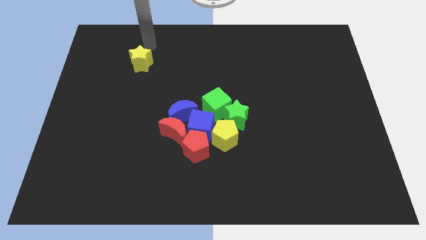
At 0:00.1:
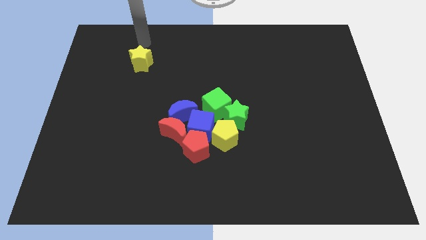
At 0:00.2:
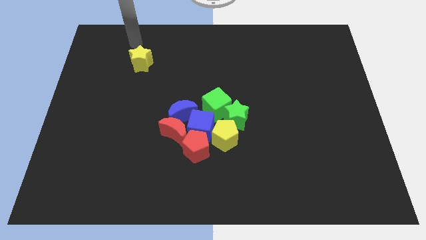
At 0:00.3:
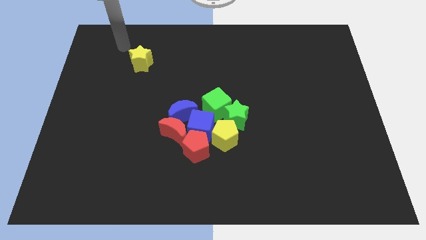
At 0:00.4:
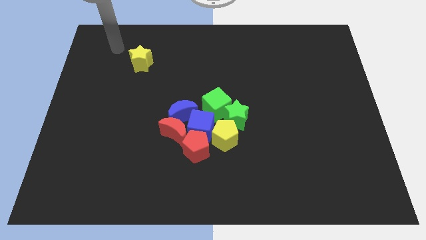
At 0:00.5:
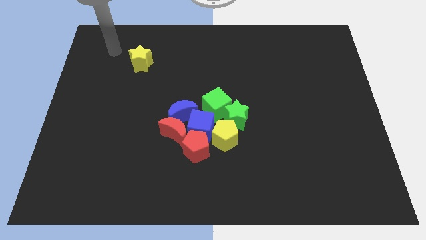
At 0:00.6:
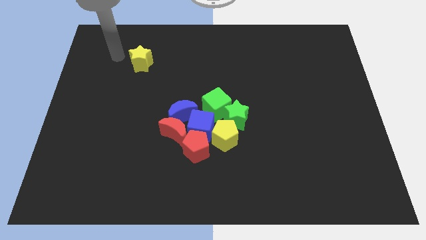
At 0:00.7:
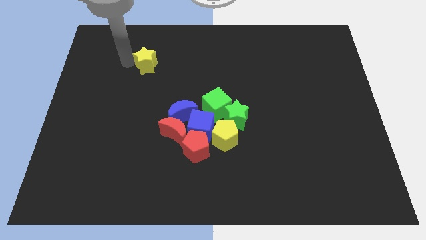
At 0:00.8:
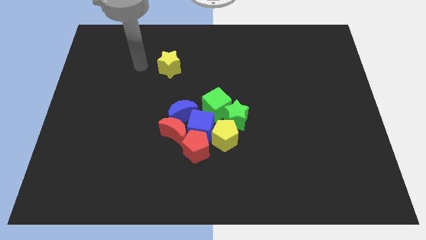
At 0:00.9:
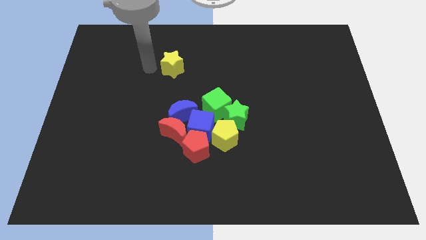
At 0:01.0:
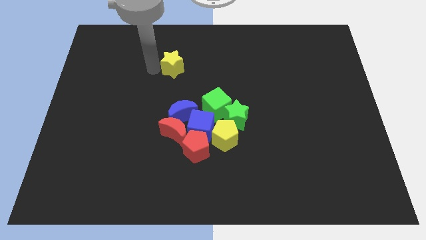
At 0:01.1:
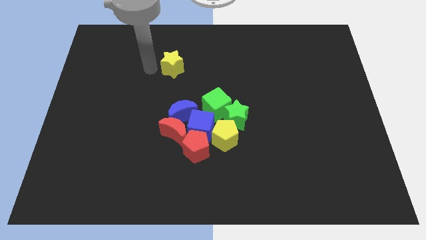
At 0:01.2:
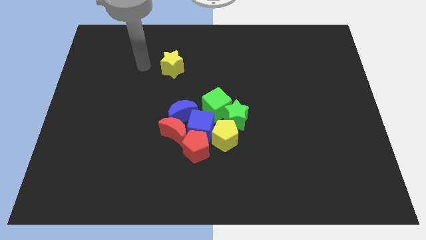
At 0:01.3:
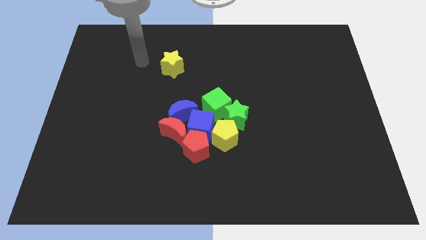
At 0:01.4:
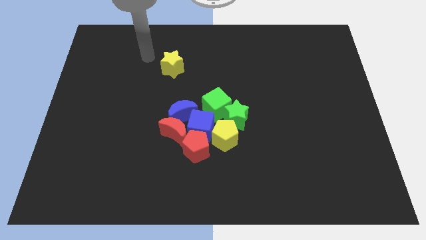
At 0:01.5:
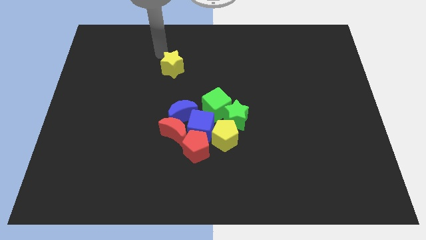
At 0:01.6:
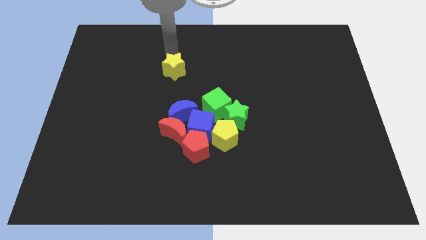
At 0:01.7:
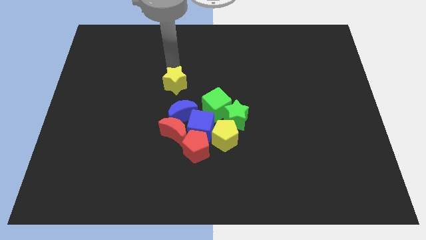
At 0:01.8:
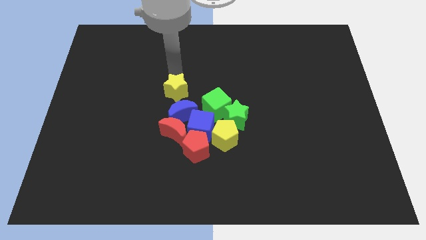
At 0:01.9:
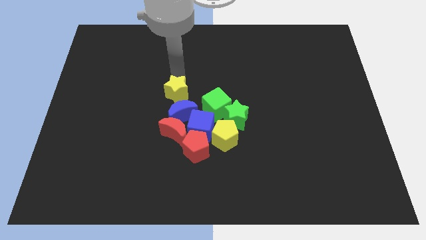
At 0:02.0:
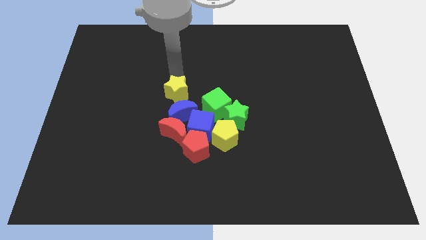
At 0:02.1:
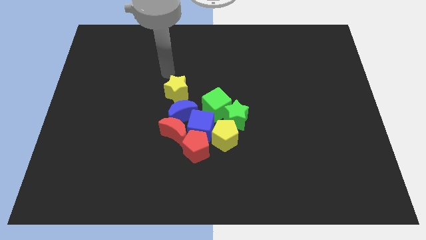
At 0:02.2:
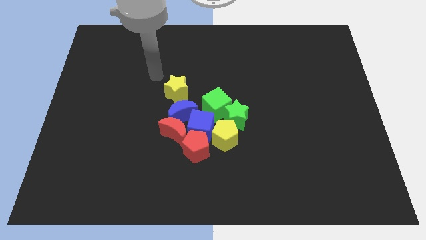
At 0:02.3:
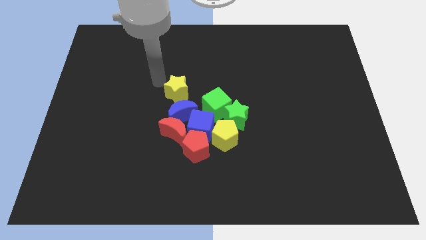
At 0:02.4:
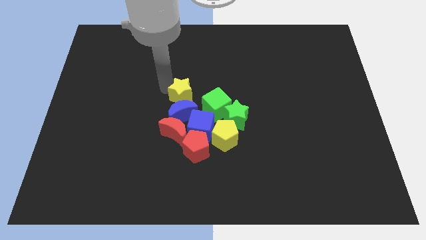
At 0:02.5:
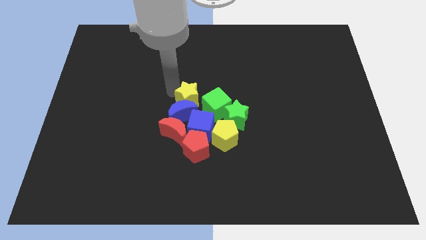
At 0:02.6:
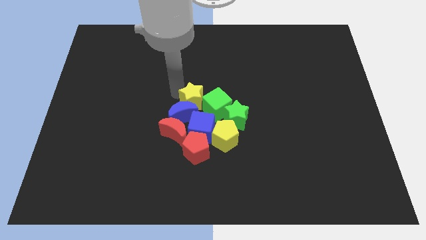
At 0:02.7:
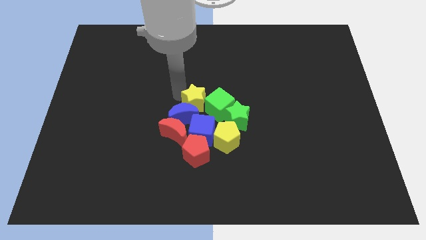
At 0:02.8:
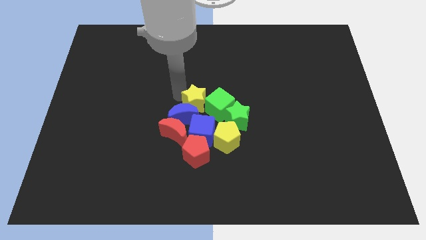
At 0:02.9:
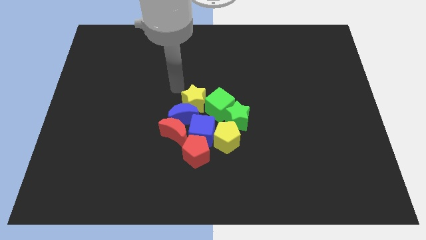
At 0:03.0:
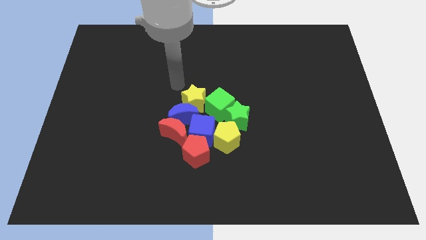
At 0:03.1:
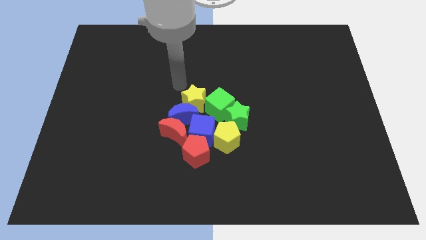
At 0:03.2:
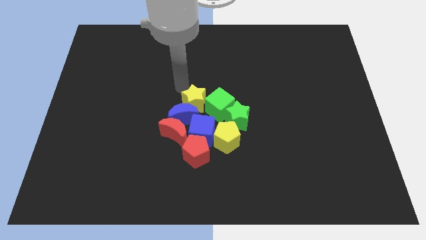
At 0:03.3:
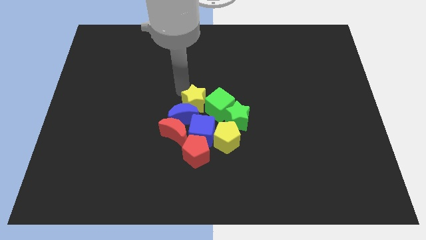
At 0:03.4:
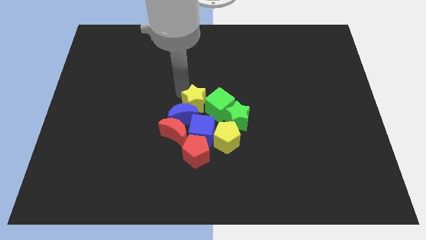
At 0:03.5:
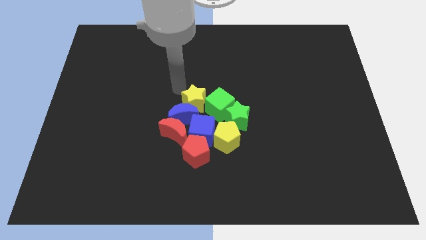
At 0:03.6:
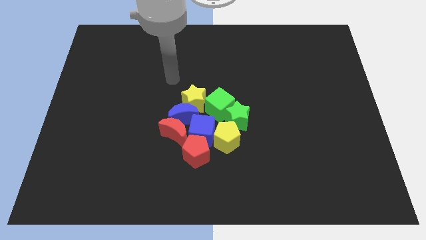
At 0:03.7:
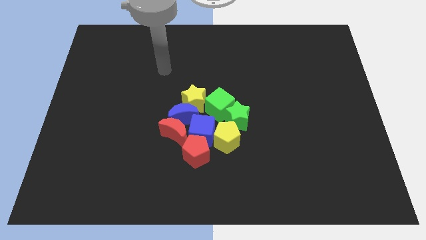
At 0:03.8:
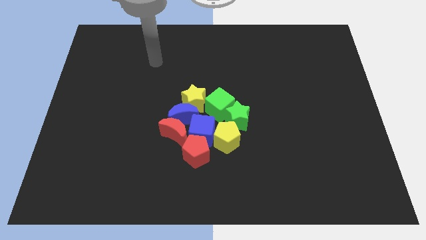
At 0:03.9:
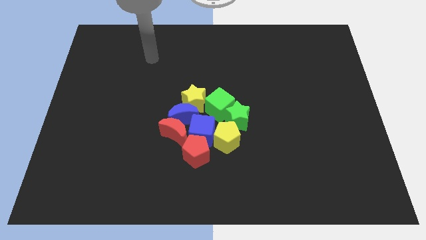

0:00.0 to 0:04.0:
push the yellow star into the green cube at the center of the board

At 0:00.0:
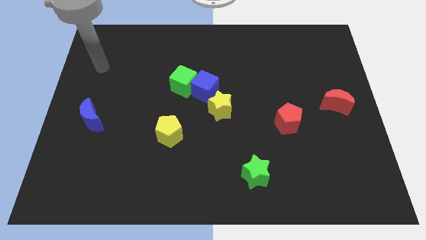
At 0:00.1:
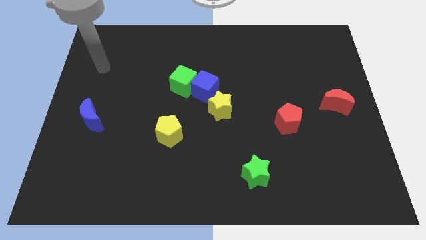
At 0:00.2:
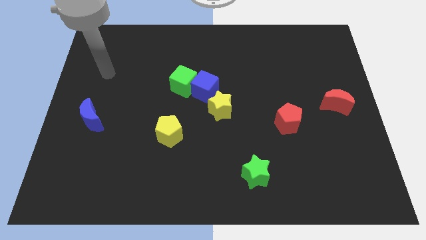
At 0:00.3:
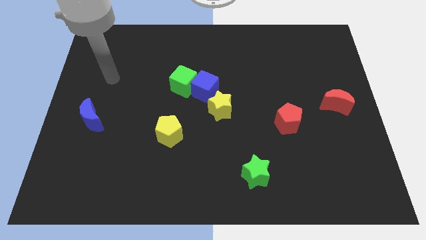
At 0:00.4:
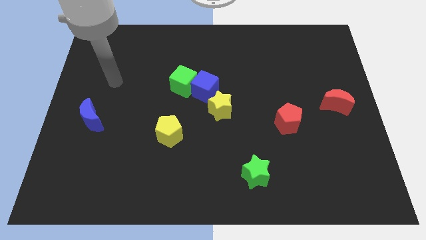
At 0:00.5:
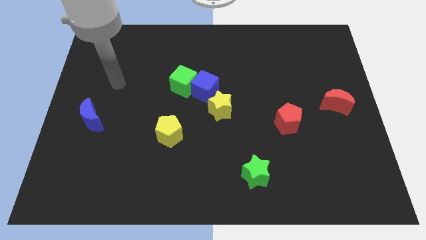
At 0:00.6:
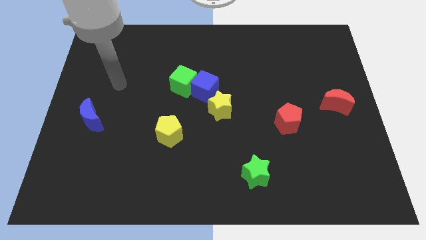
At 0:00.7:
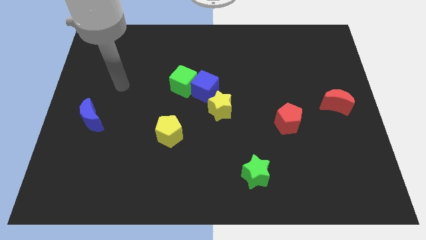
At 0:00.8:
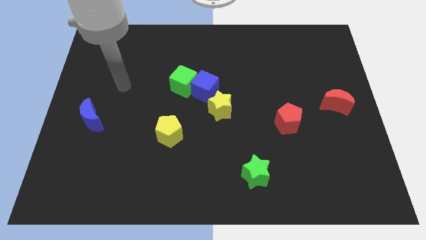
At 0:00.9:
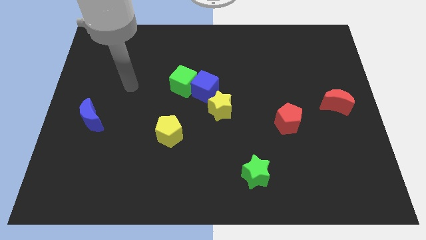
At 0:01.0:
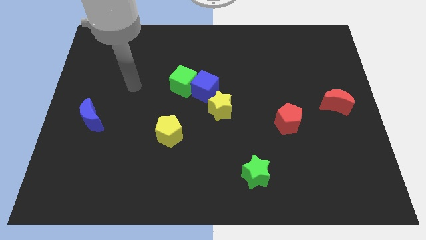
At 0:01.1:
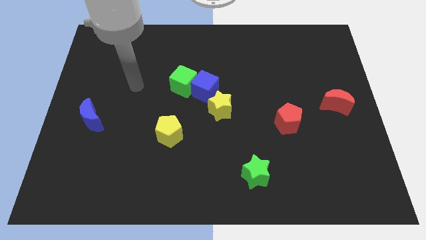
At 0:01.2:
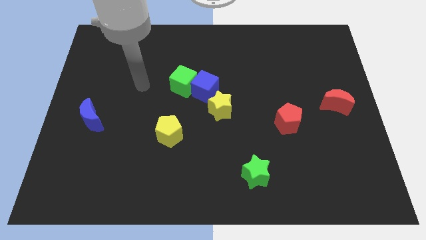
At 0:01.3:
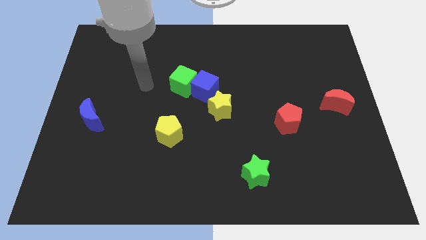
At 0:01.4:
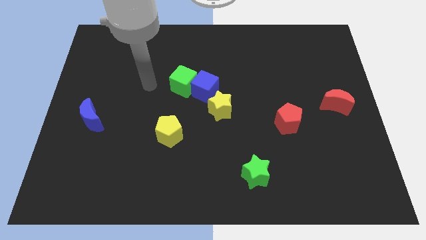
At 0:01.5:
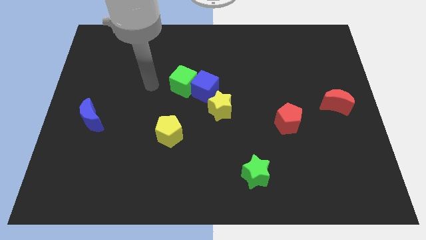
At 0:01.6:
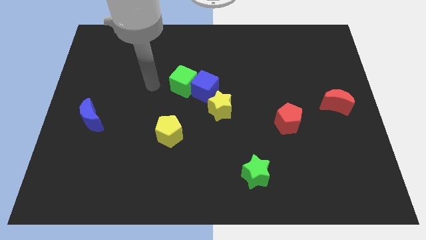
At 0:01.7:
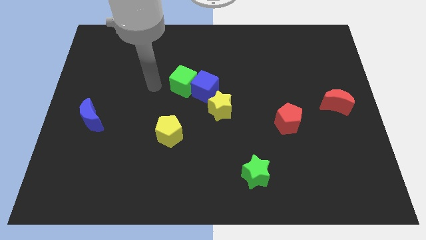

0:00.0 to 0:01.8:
place your hand to left side of the green cube

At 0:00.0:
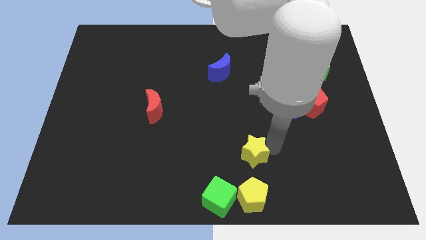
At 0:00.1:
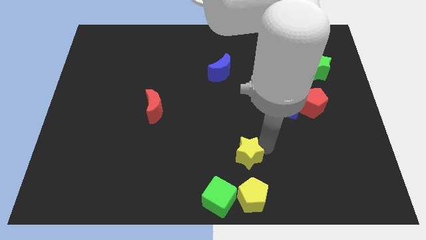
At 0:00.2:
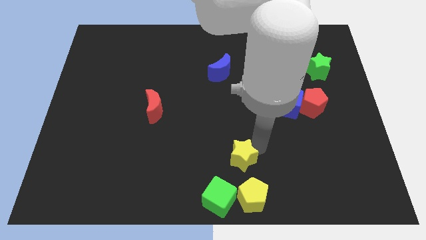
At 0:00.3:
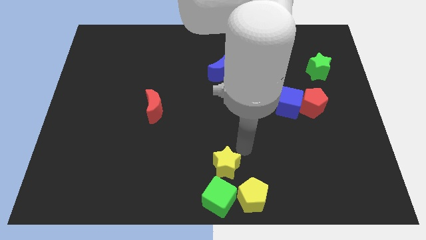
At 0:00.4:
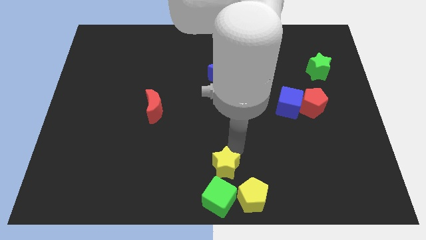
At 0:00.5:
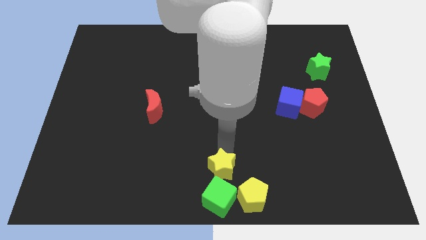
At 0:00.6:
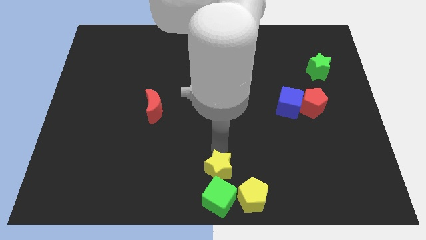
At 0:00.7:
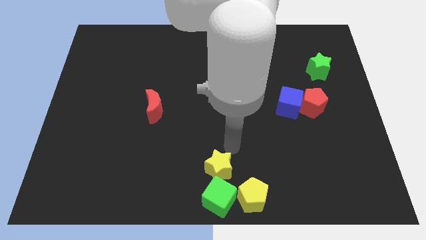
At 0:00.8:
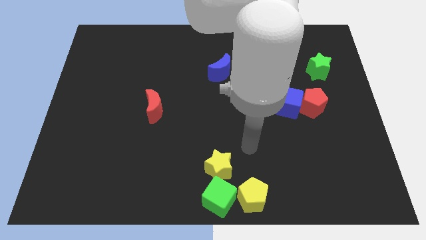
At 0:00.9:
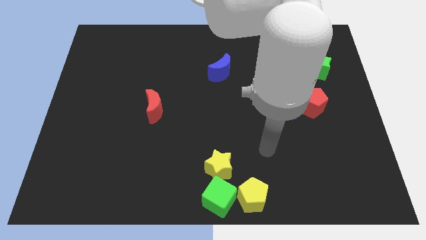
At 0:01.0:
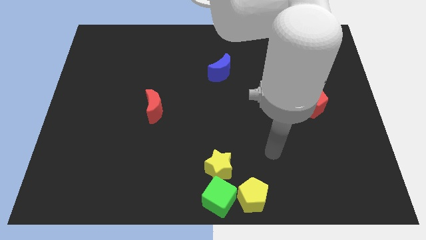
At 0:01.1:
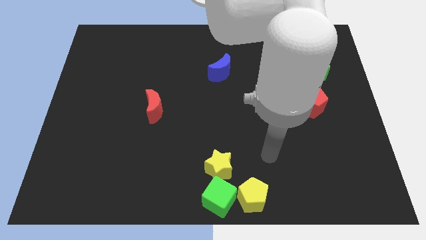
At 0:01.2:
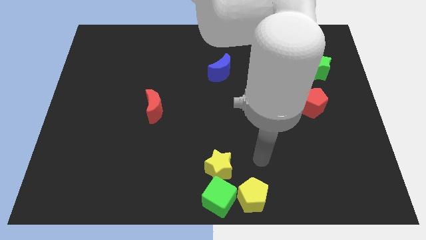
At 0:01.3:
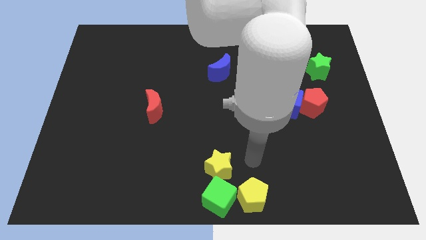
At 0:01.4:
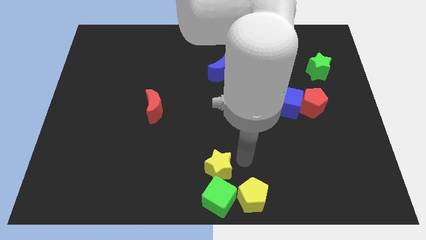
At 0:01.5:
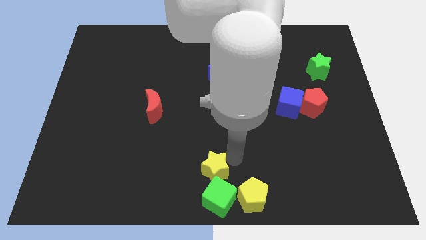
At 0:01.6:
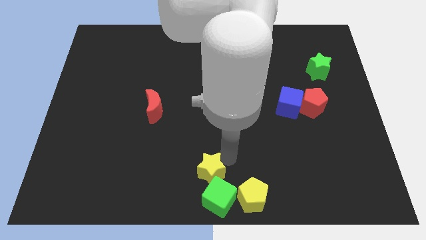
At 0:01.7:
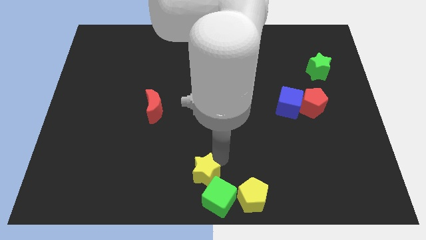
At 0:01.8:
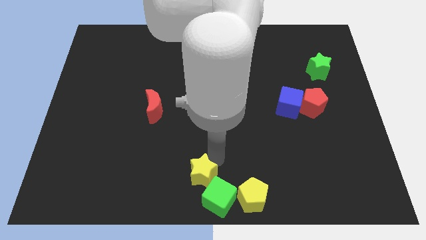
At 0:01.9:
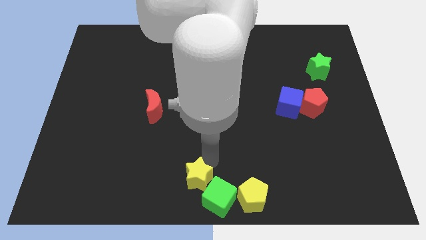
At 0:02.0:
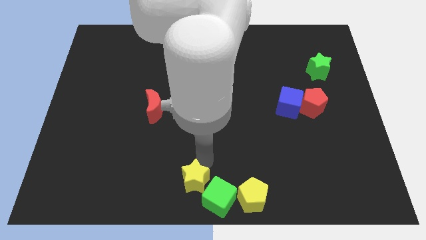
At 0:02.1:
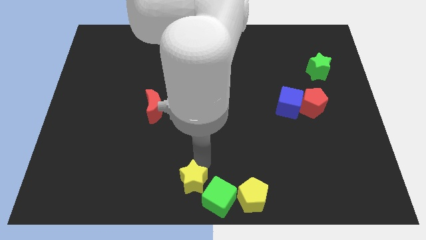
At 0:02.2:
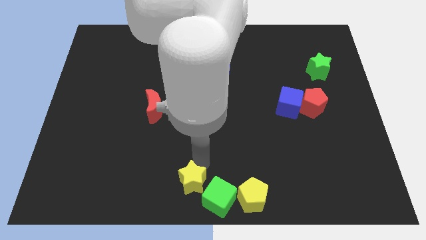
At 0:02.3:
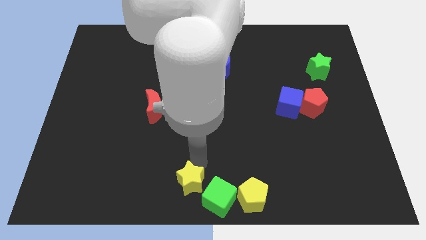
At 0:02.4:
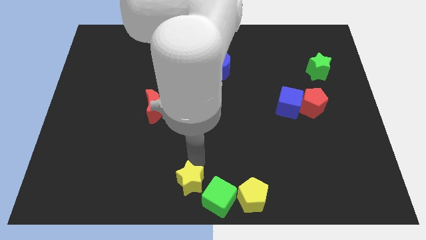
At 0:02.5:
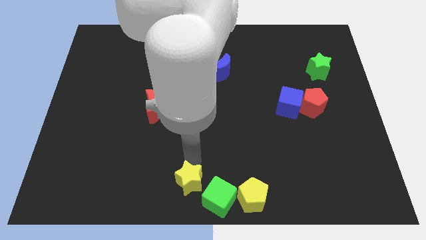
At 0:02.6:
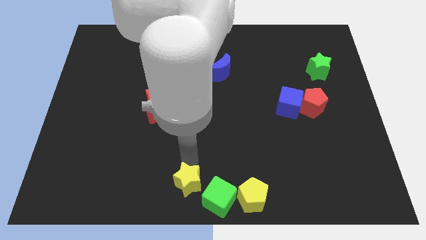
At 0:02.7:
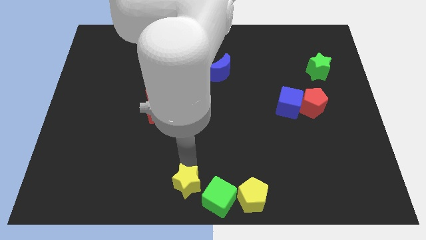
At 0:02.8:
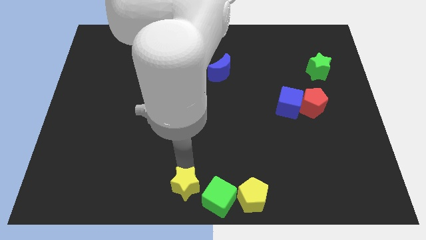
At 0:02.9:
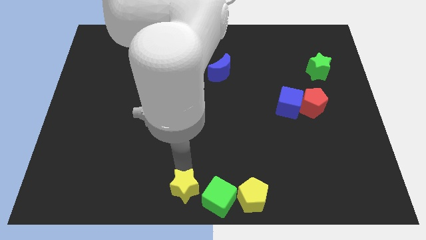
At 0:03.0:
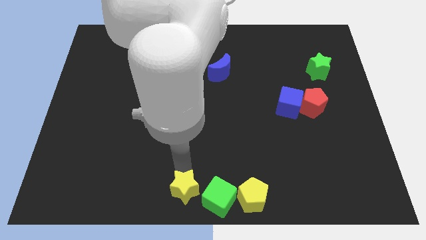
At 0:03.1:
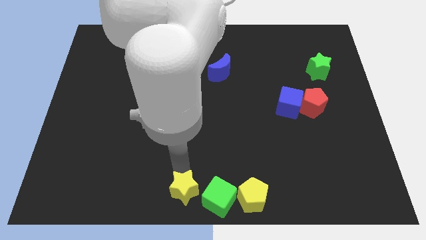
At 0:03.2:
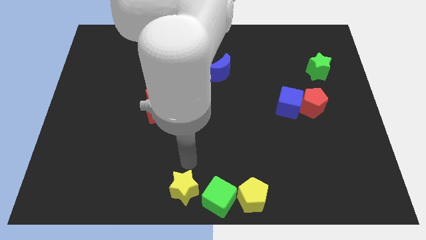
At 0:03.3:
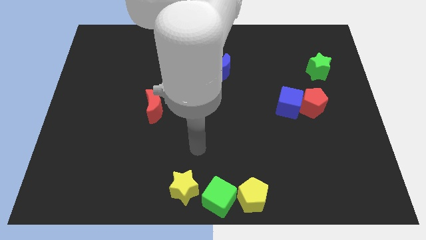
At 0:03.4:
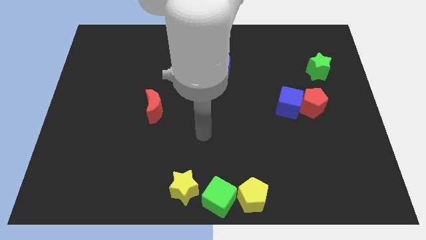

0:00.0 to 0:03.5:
place the yellow star at left side of the green cube
